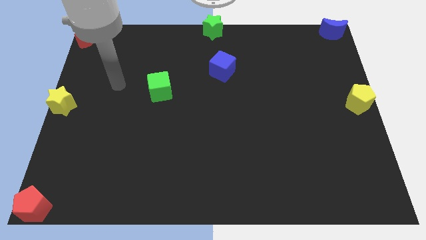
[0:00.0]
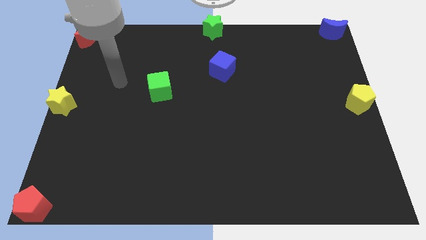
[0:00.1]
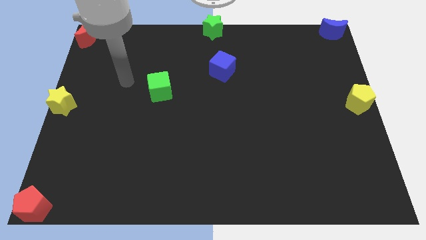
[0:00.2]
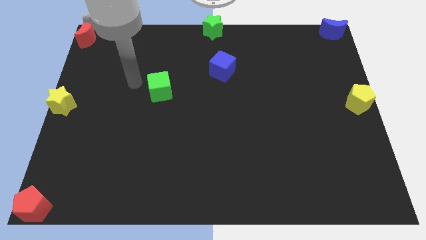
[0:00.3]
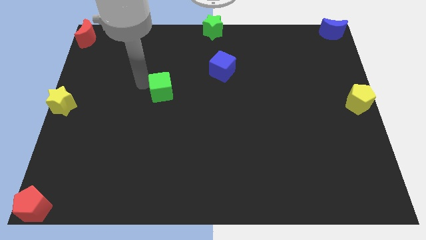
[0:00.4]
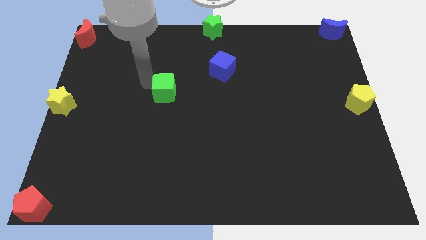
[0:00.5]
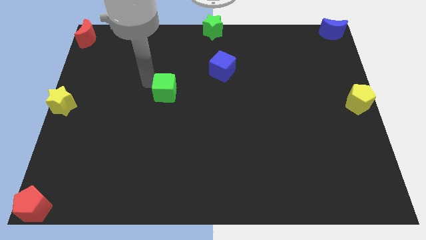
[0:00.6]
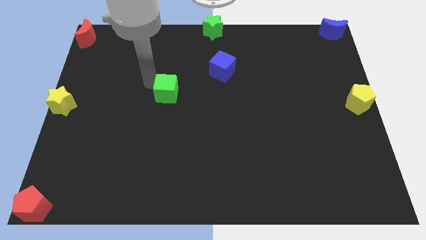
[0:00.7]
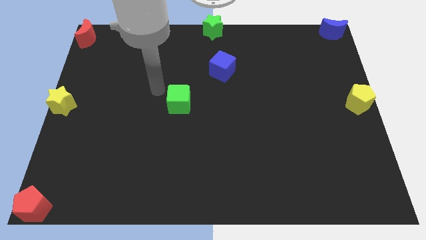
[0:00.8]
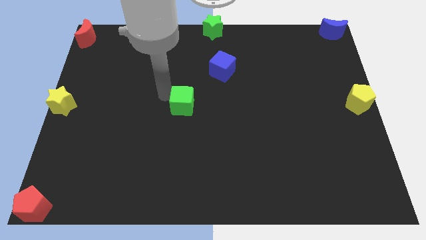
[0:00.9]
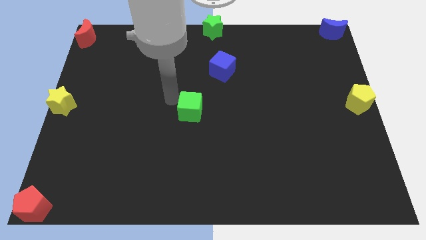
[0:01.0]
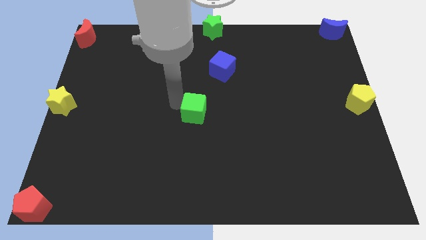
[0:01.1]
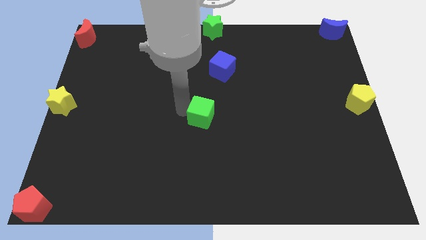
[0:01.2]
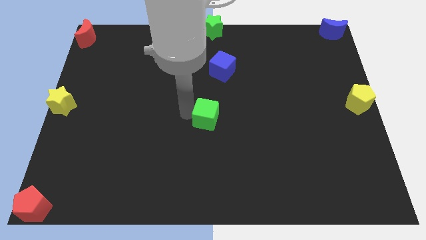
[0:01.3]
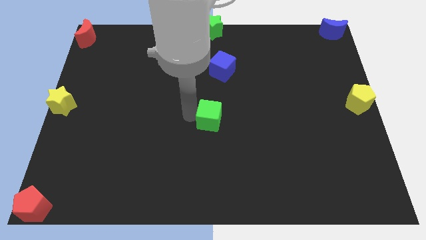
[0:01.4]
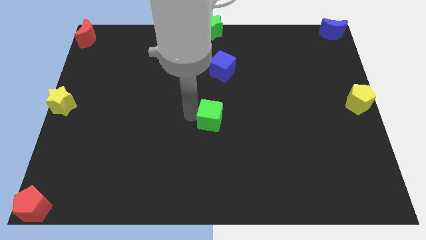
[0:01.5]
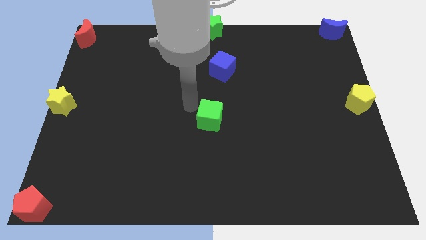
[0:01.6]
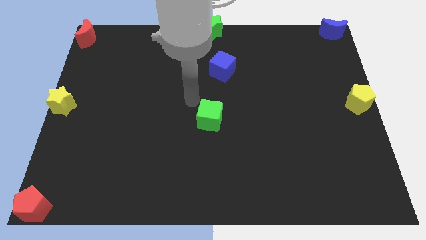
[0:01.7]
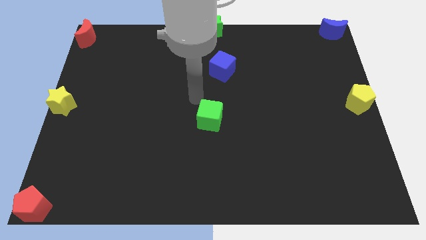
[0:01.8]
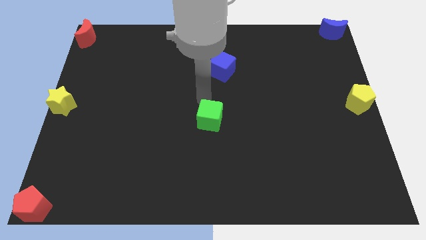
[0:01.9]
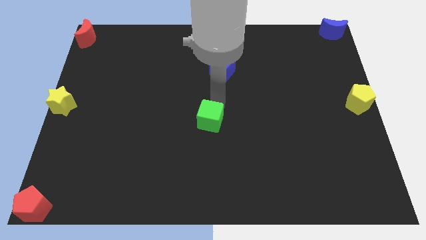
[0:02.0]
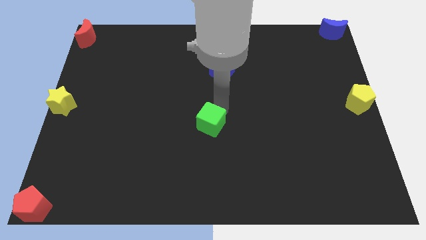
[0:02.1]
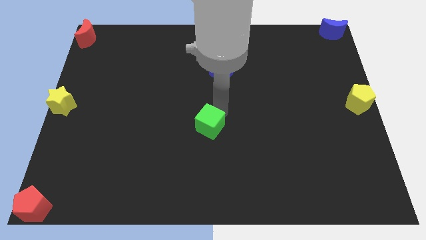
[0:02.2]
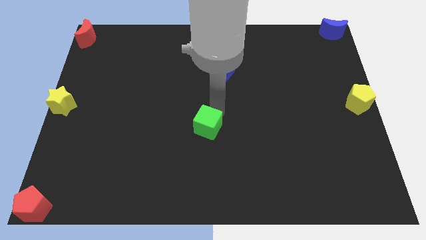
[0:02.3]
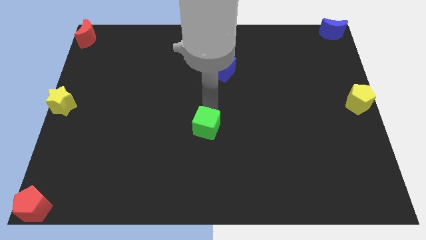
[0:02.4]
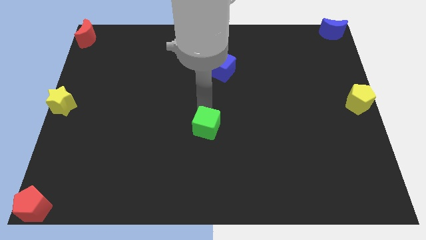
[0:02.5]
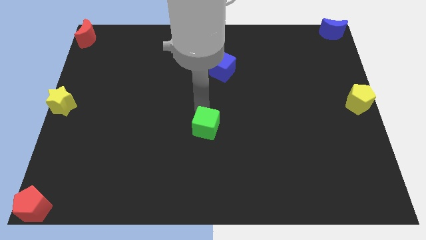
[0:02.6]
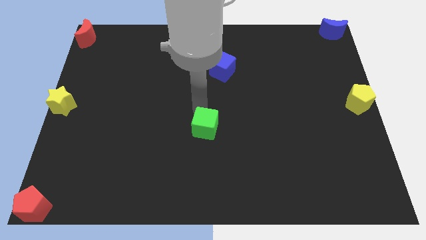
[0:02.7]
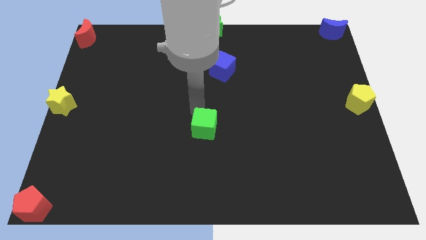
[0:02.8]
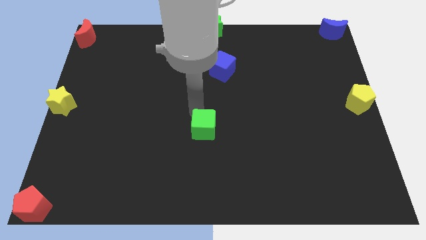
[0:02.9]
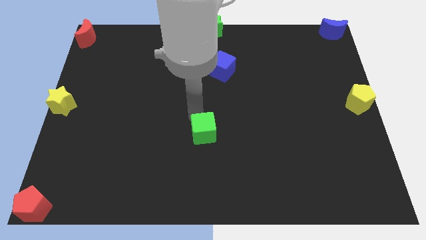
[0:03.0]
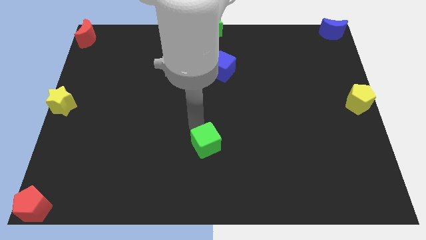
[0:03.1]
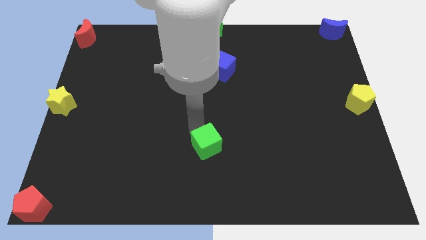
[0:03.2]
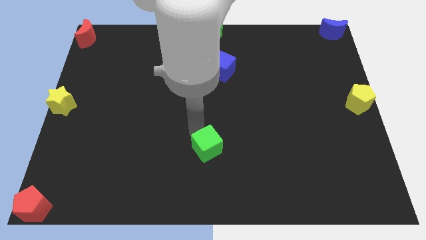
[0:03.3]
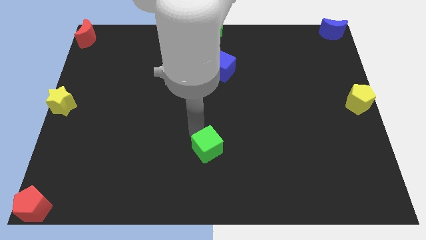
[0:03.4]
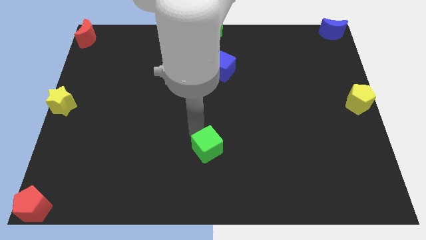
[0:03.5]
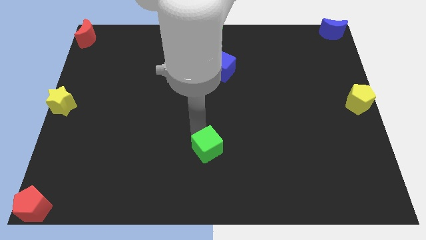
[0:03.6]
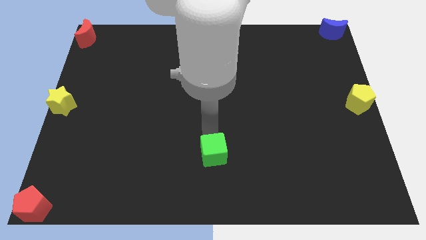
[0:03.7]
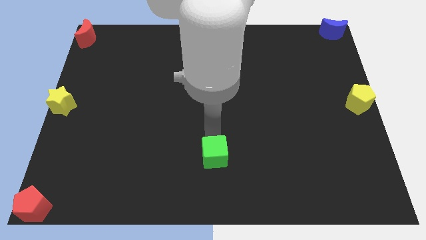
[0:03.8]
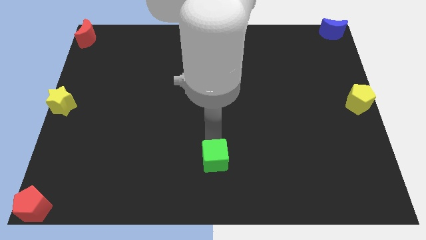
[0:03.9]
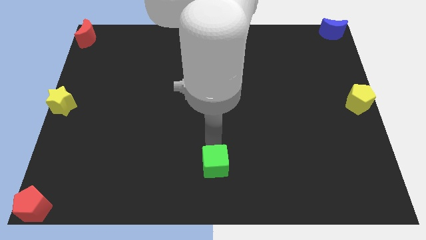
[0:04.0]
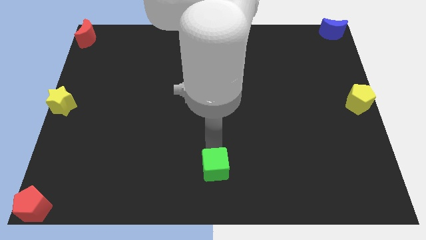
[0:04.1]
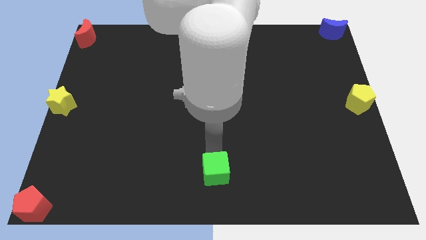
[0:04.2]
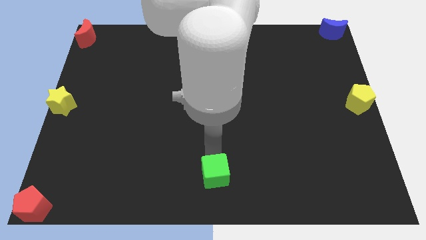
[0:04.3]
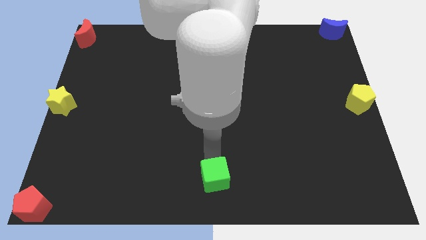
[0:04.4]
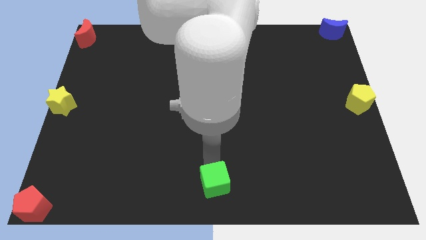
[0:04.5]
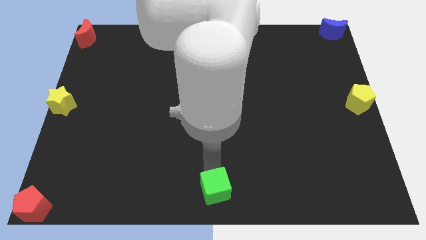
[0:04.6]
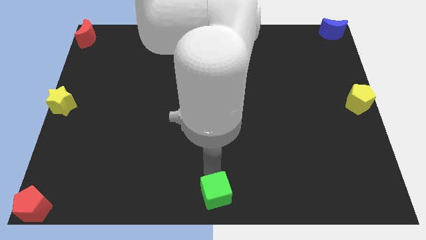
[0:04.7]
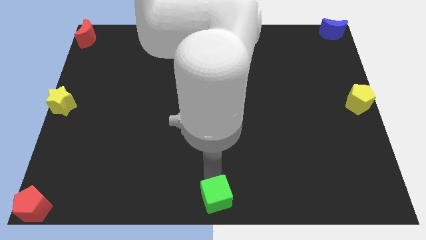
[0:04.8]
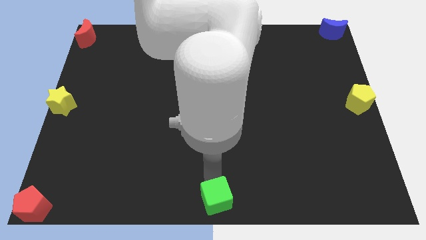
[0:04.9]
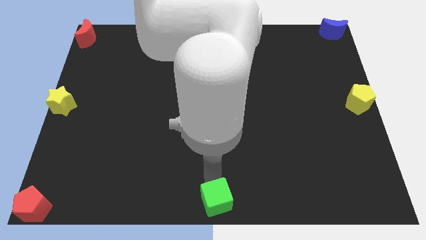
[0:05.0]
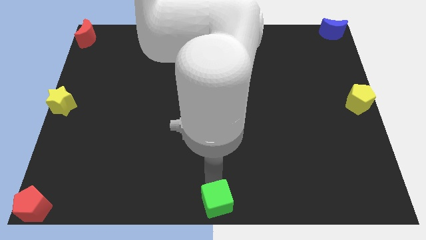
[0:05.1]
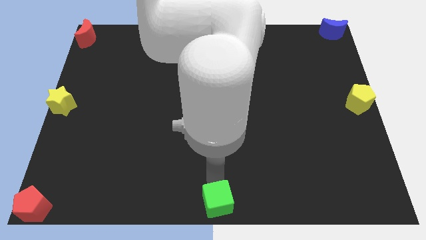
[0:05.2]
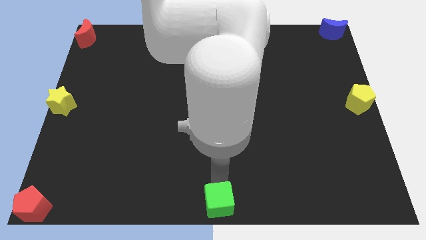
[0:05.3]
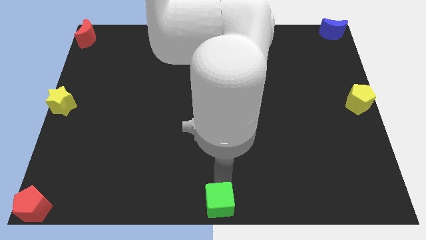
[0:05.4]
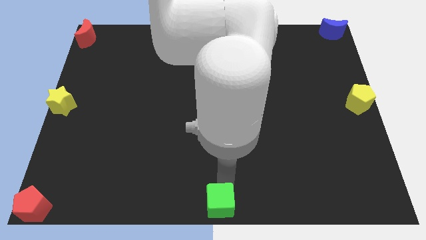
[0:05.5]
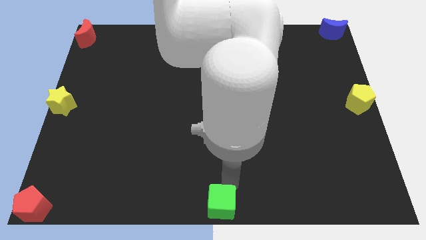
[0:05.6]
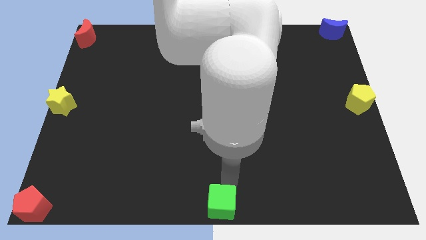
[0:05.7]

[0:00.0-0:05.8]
place green cube to the center bottom of the board

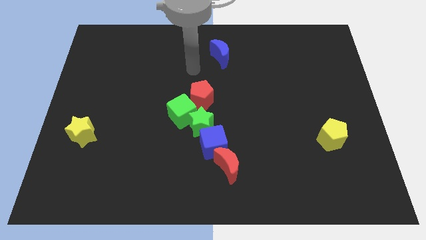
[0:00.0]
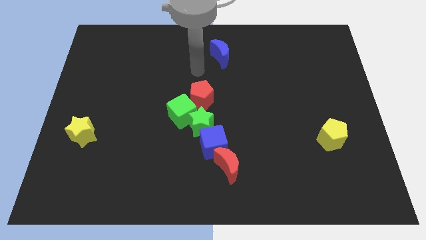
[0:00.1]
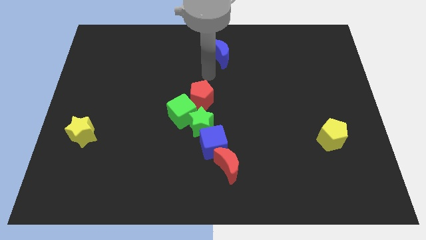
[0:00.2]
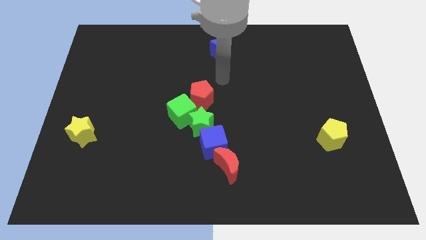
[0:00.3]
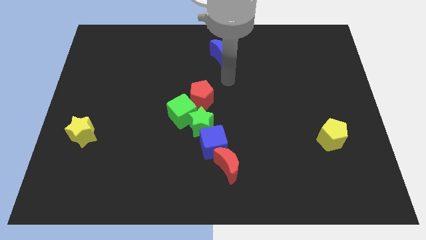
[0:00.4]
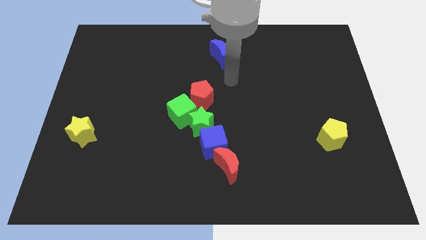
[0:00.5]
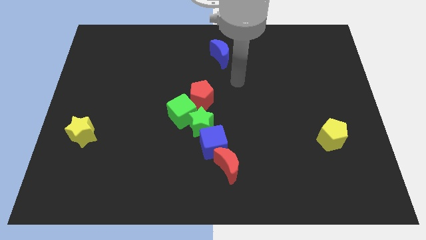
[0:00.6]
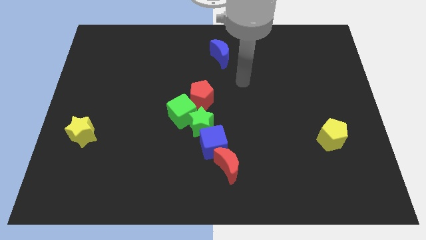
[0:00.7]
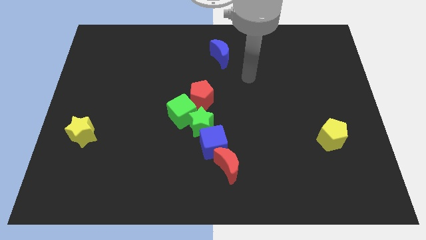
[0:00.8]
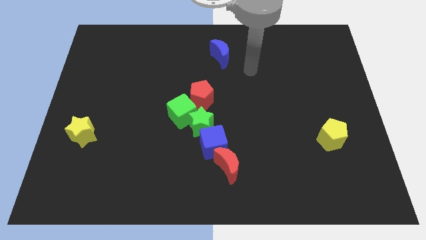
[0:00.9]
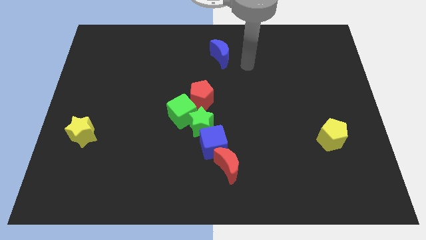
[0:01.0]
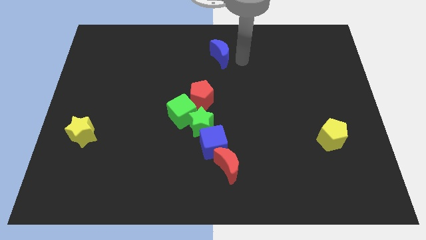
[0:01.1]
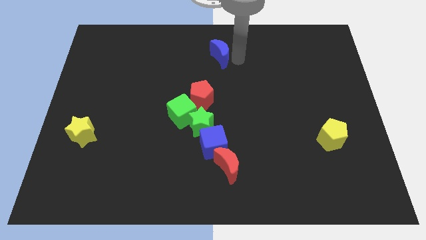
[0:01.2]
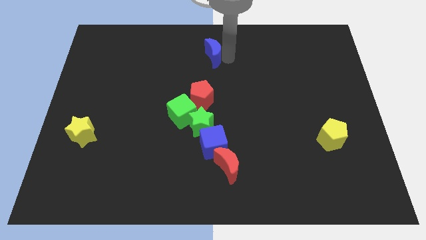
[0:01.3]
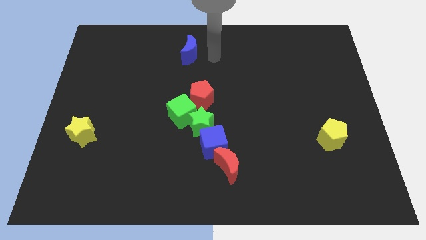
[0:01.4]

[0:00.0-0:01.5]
touch the blue moon

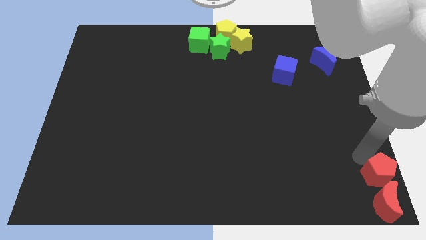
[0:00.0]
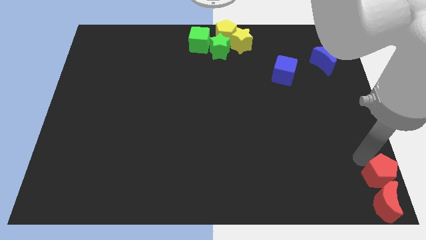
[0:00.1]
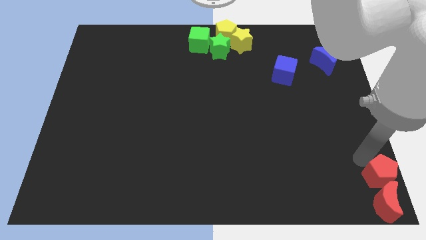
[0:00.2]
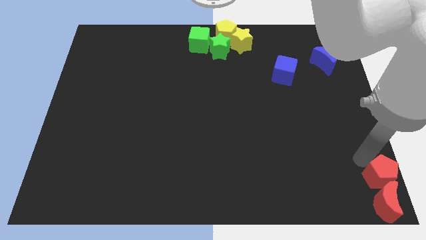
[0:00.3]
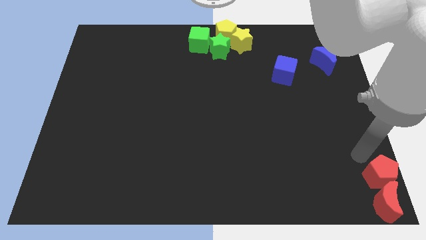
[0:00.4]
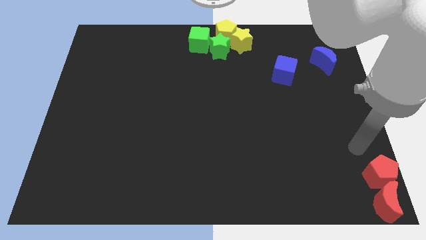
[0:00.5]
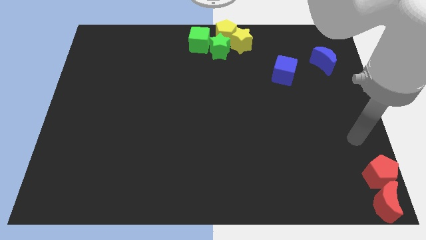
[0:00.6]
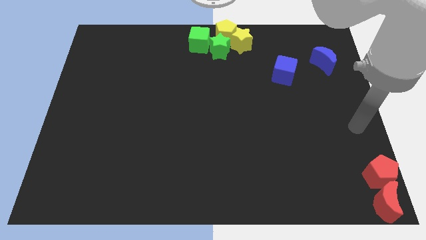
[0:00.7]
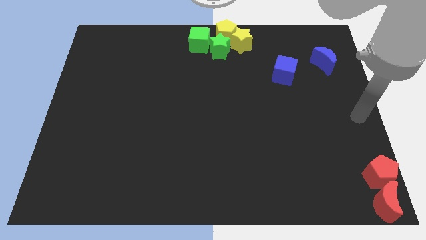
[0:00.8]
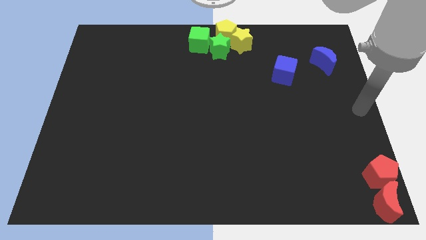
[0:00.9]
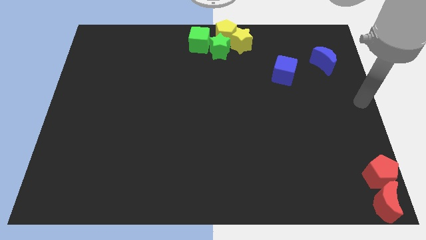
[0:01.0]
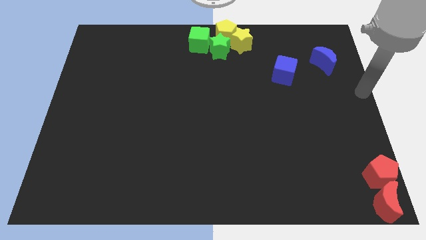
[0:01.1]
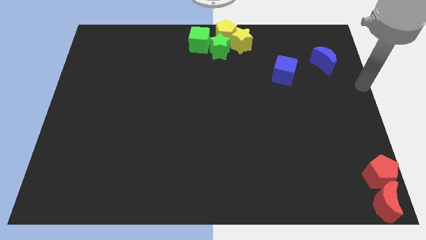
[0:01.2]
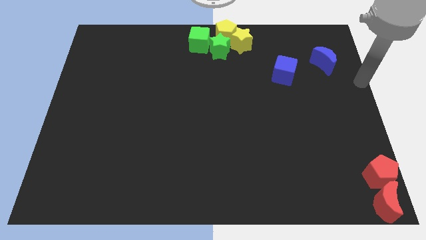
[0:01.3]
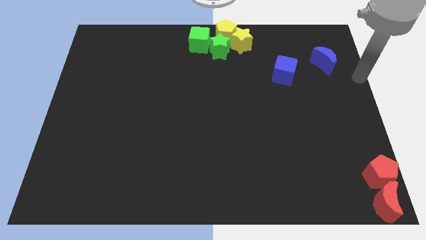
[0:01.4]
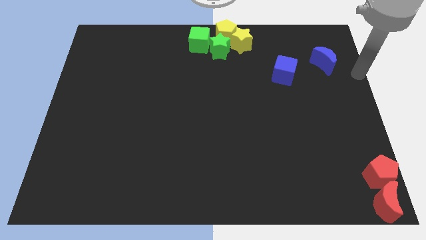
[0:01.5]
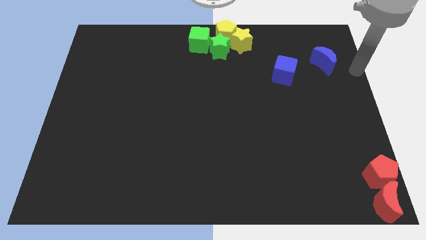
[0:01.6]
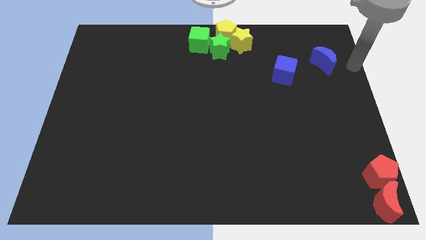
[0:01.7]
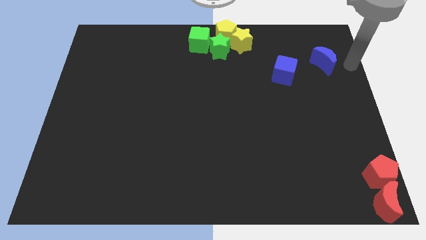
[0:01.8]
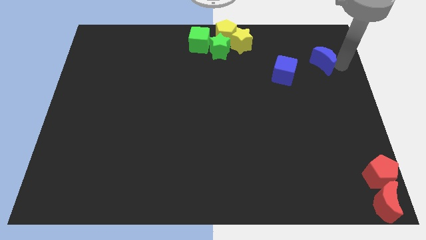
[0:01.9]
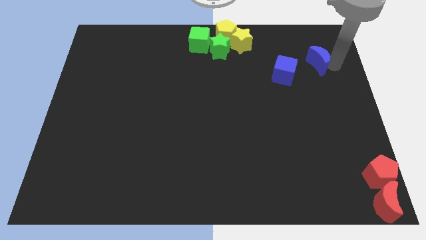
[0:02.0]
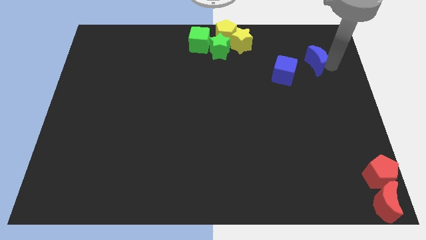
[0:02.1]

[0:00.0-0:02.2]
move your arm to the right of the blue crescent
